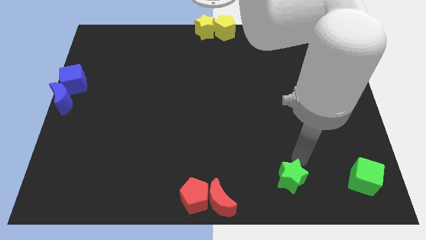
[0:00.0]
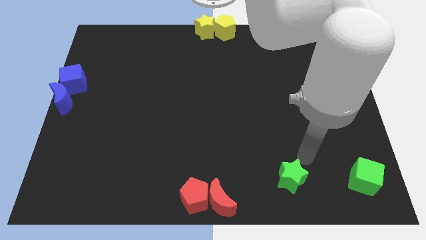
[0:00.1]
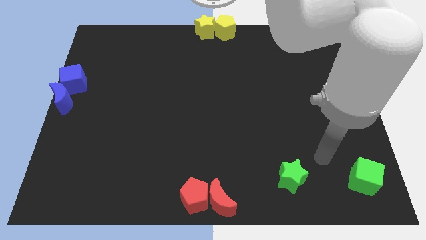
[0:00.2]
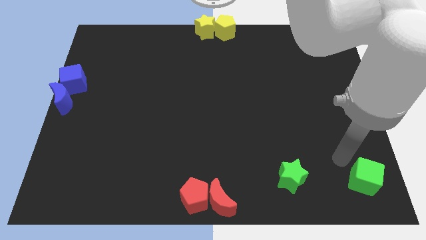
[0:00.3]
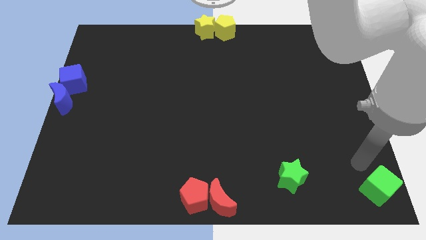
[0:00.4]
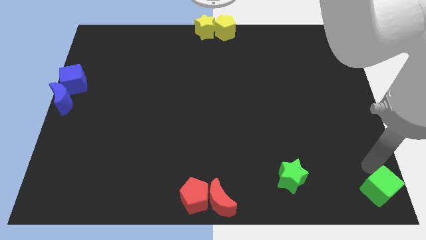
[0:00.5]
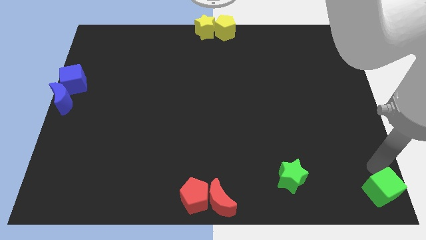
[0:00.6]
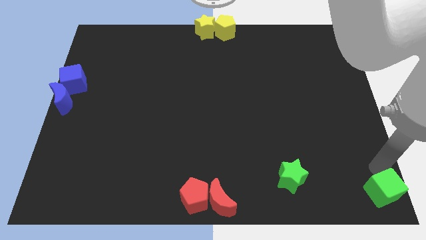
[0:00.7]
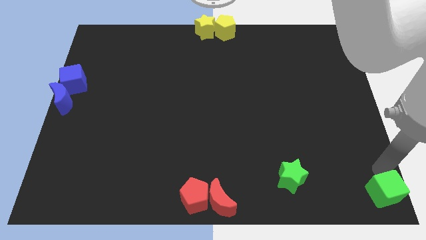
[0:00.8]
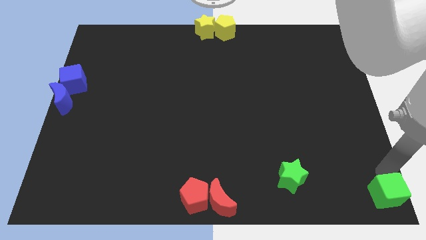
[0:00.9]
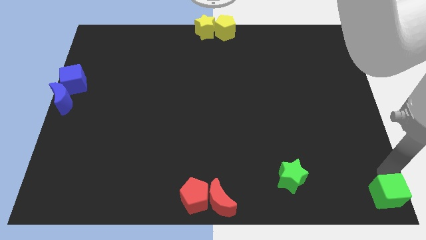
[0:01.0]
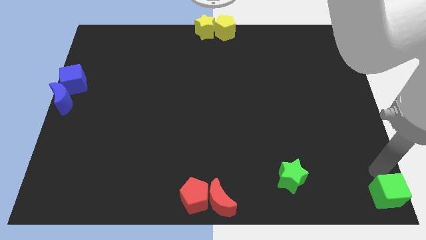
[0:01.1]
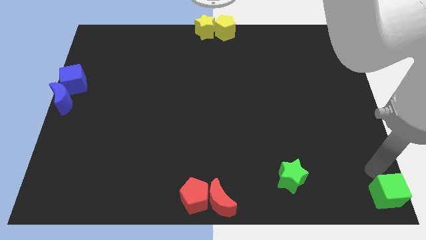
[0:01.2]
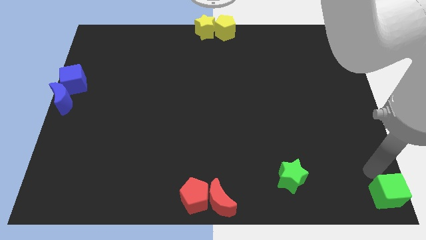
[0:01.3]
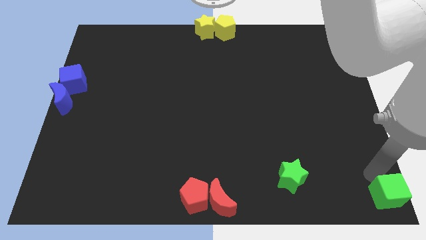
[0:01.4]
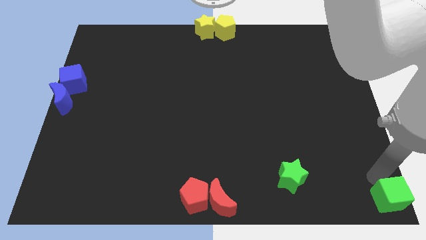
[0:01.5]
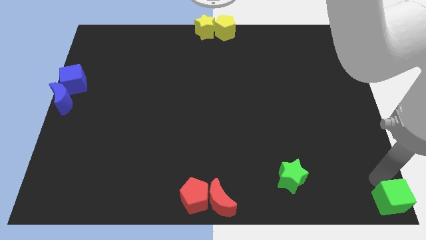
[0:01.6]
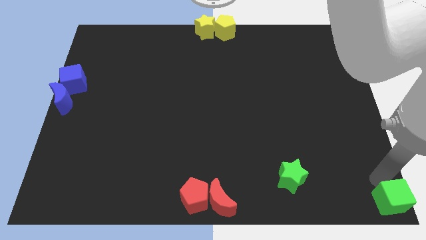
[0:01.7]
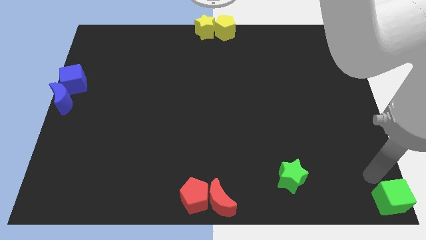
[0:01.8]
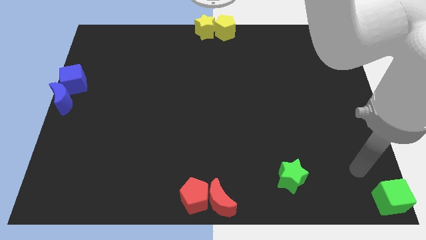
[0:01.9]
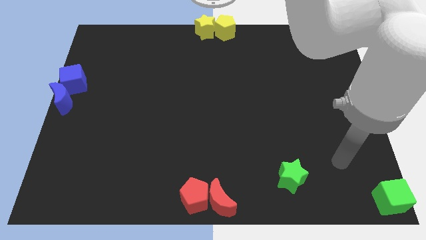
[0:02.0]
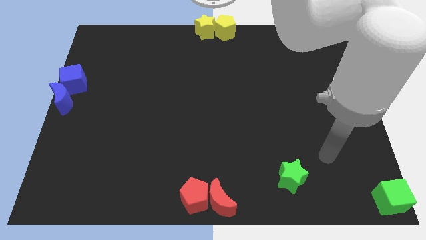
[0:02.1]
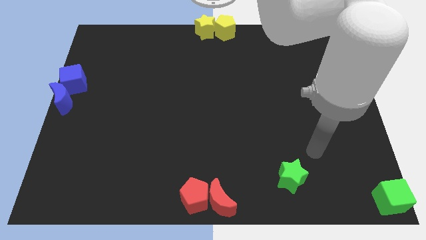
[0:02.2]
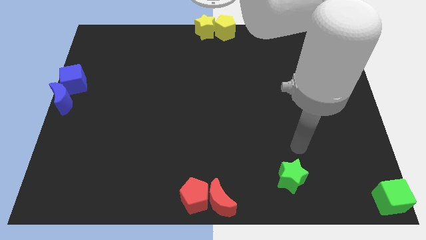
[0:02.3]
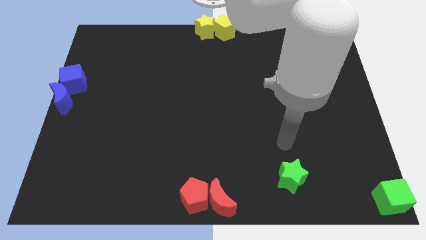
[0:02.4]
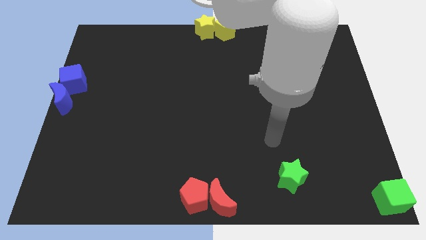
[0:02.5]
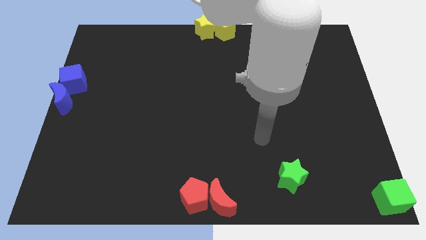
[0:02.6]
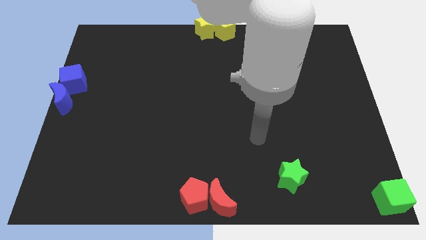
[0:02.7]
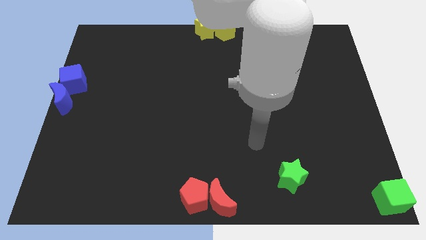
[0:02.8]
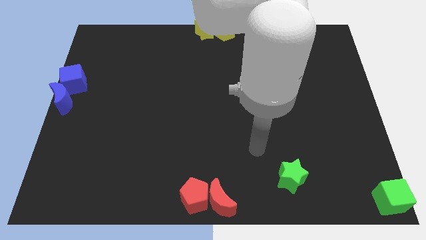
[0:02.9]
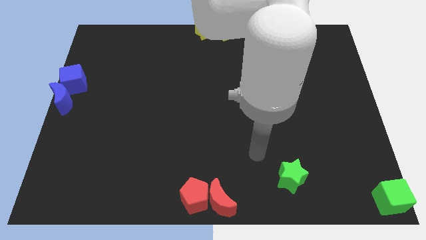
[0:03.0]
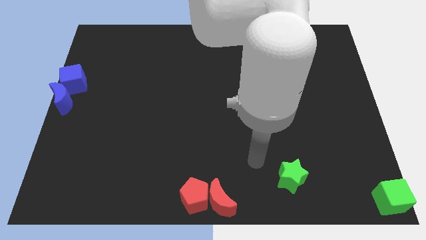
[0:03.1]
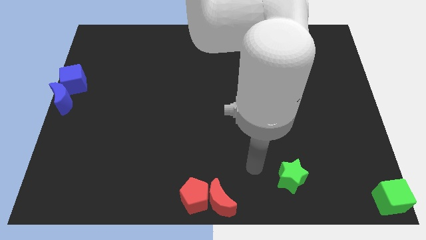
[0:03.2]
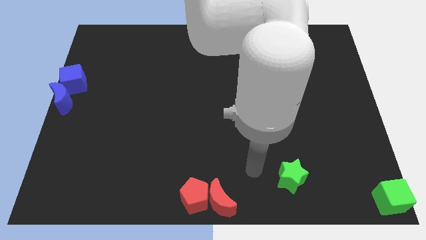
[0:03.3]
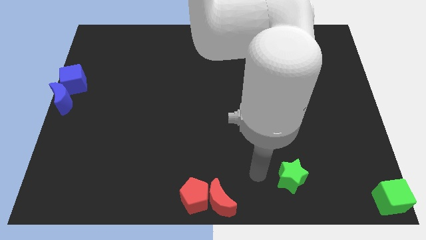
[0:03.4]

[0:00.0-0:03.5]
push the green cube to the bottom right corner

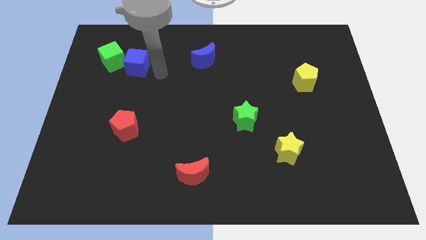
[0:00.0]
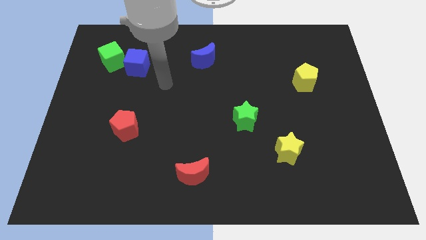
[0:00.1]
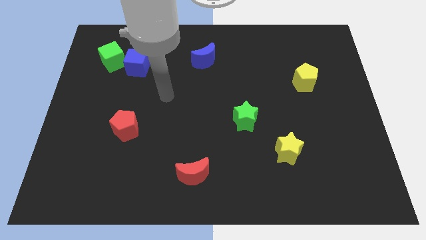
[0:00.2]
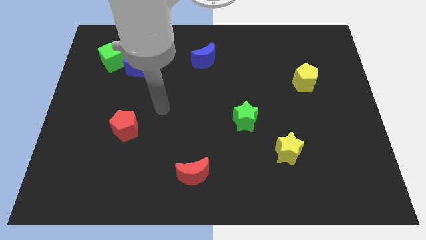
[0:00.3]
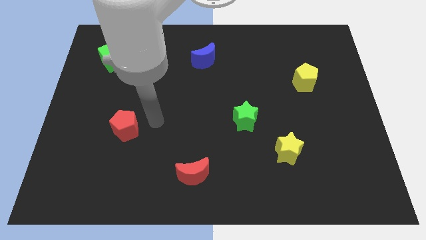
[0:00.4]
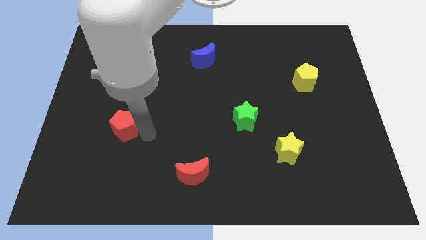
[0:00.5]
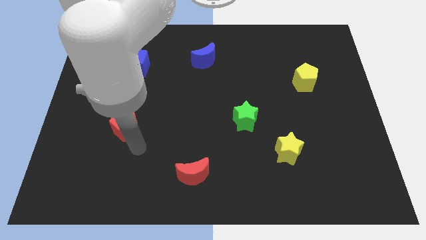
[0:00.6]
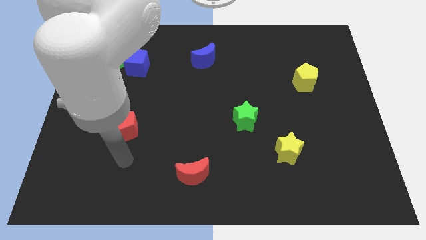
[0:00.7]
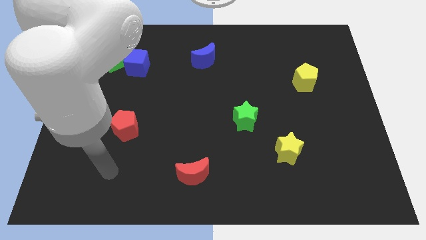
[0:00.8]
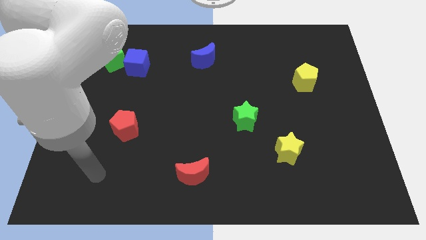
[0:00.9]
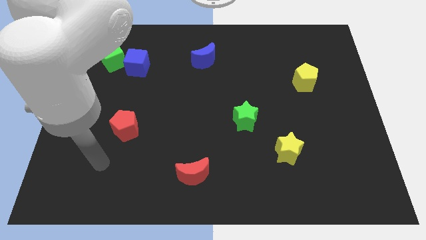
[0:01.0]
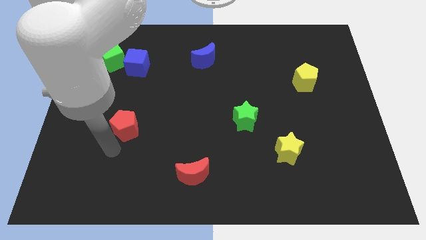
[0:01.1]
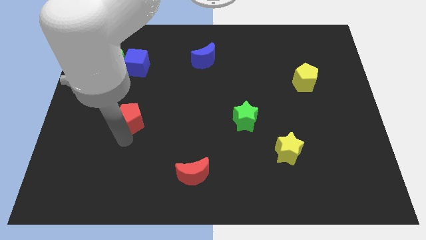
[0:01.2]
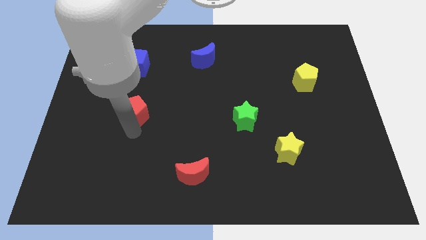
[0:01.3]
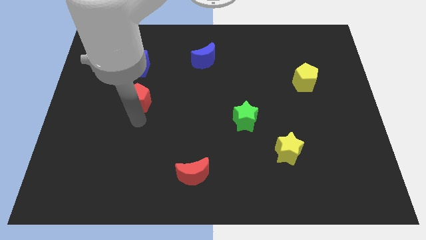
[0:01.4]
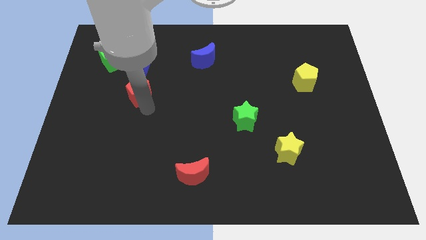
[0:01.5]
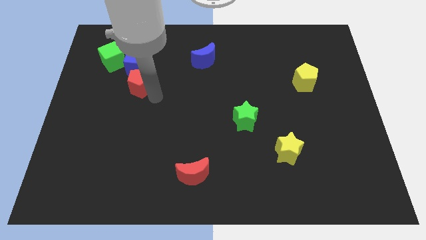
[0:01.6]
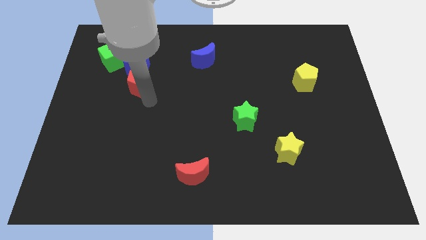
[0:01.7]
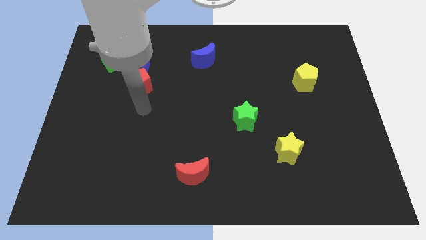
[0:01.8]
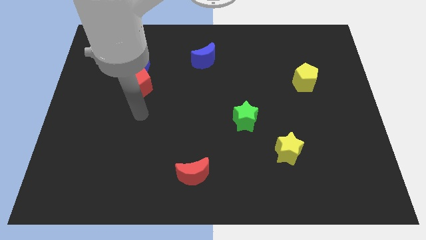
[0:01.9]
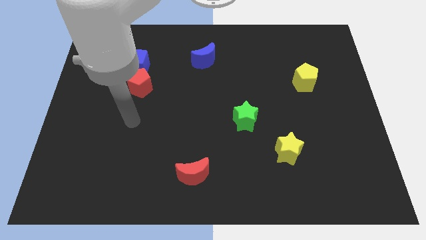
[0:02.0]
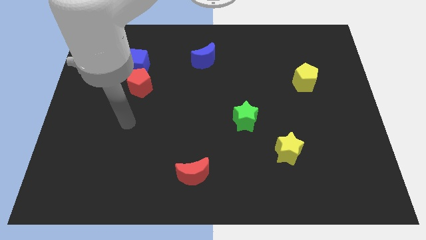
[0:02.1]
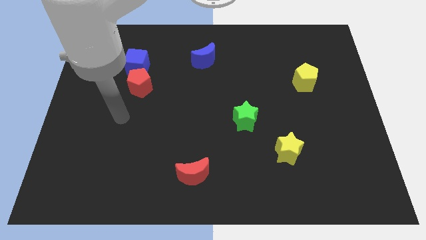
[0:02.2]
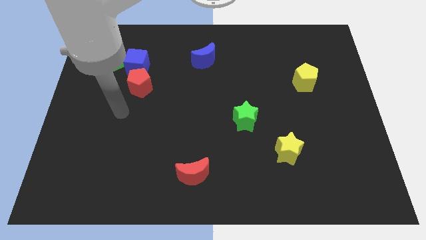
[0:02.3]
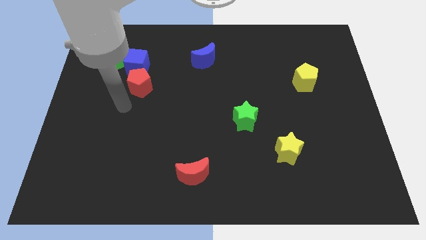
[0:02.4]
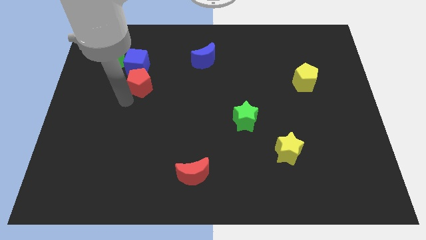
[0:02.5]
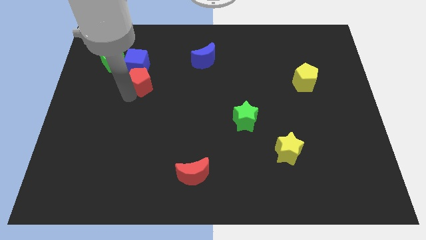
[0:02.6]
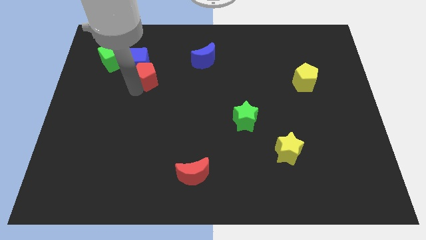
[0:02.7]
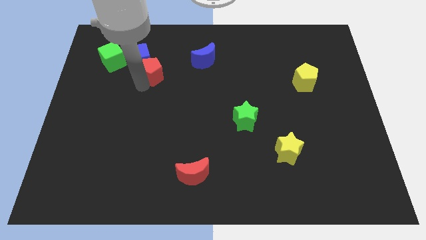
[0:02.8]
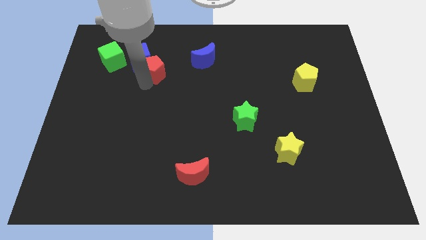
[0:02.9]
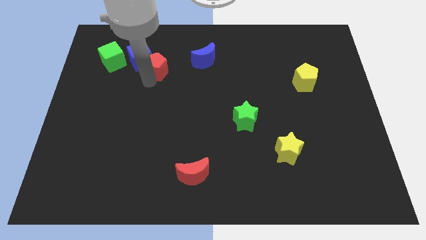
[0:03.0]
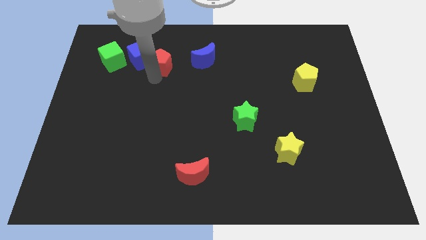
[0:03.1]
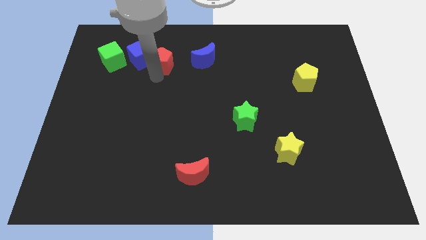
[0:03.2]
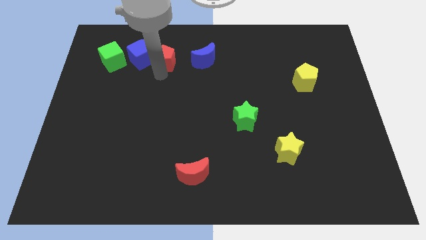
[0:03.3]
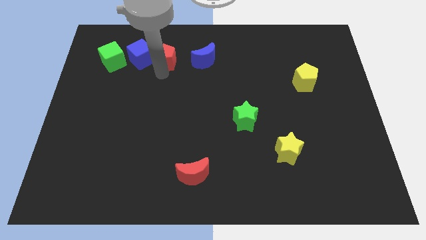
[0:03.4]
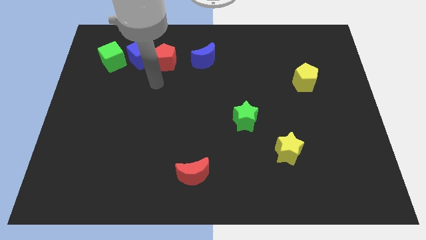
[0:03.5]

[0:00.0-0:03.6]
push the red pentagon in between the blue cube and blue moon

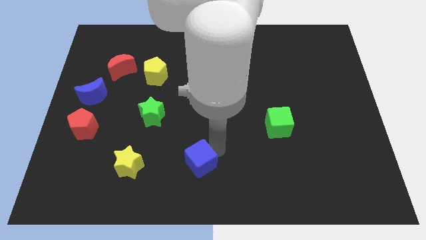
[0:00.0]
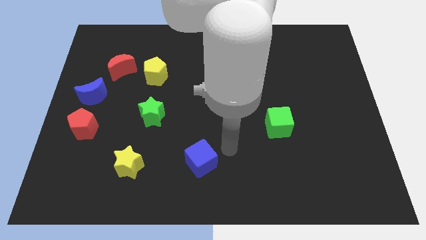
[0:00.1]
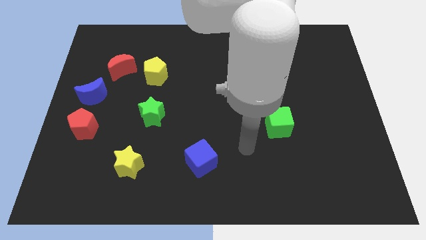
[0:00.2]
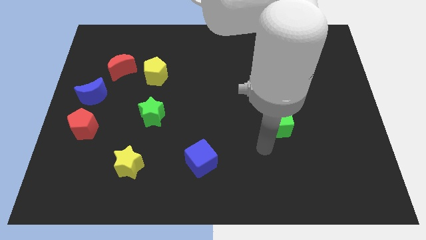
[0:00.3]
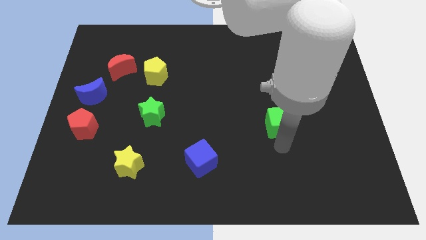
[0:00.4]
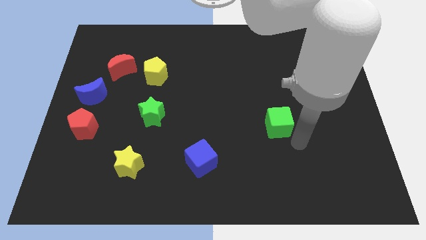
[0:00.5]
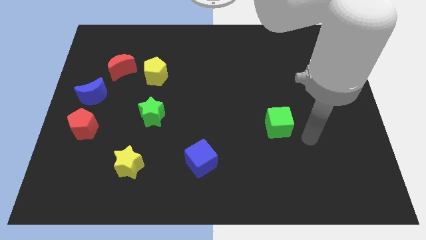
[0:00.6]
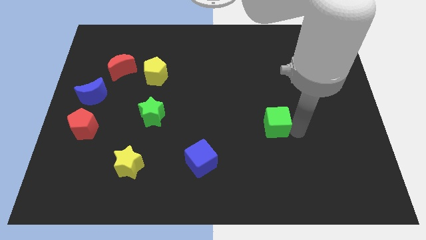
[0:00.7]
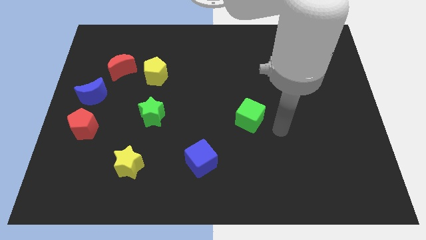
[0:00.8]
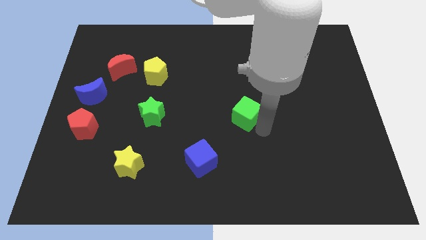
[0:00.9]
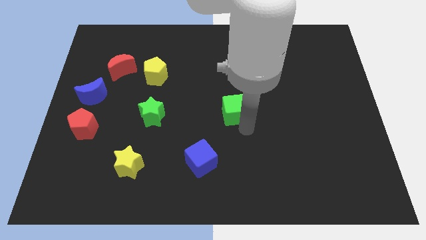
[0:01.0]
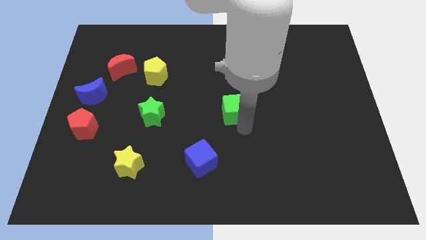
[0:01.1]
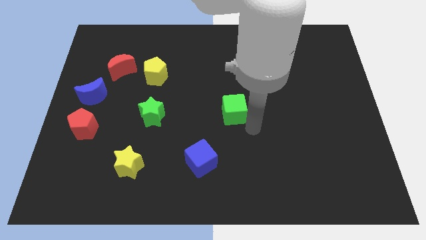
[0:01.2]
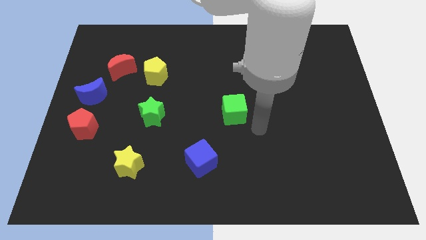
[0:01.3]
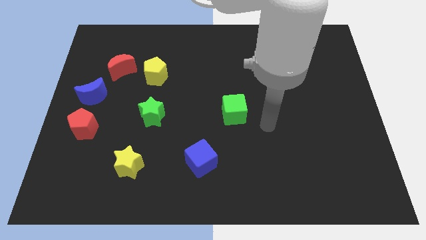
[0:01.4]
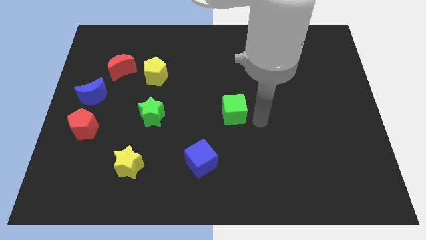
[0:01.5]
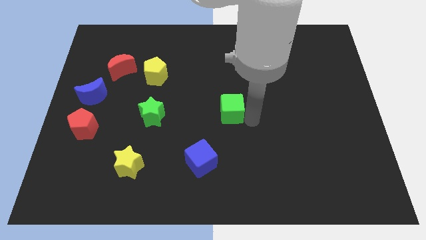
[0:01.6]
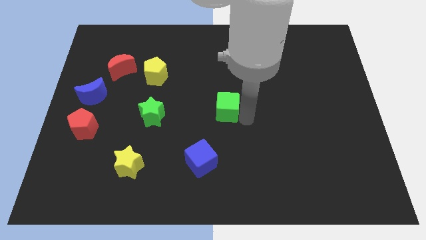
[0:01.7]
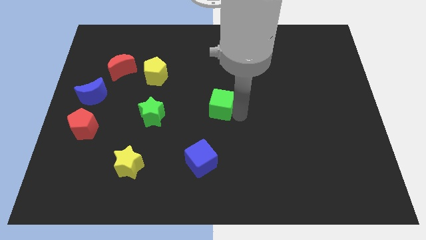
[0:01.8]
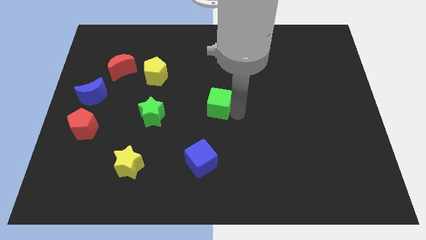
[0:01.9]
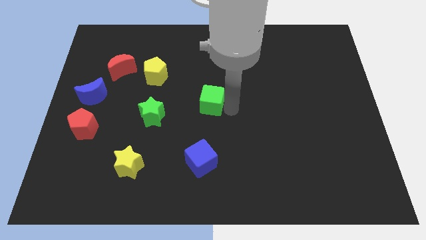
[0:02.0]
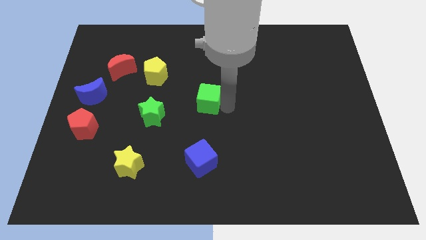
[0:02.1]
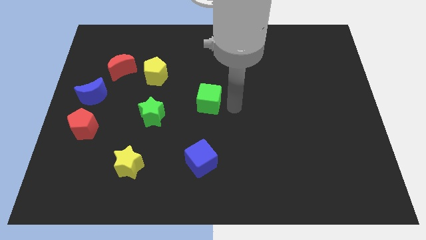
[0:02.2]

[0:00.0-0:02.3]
place the green cube at the top of blue cube
